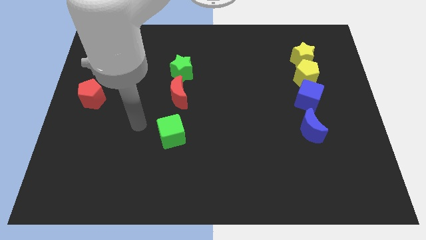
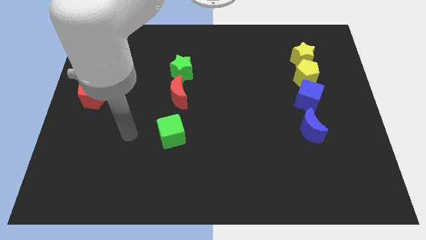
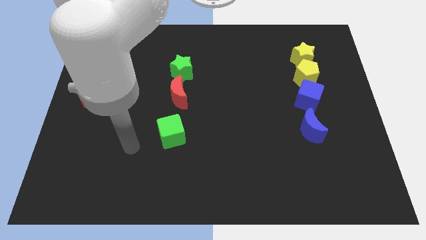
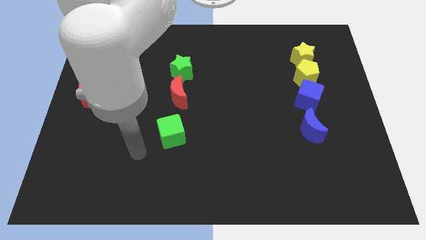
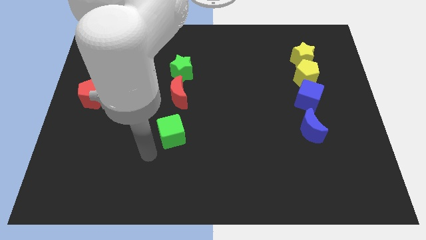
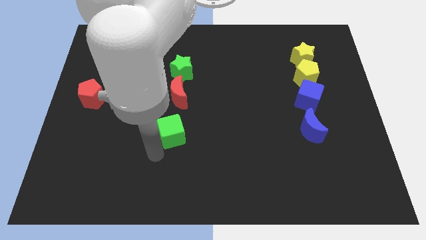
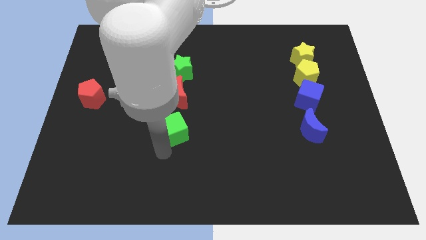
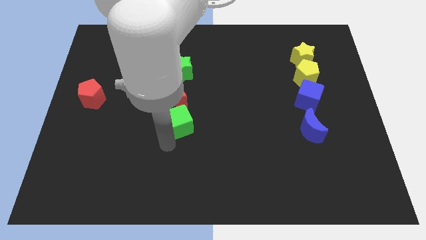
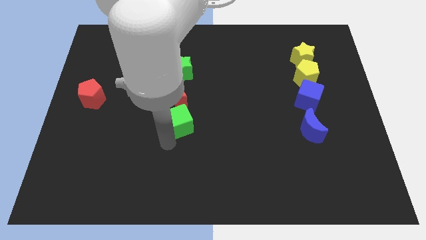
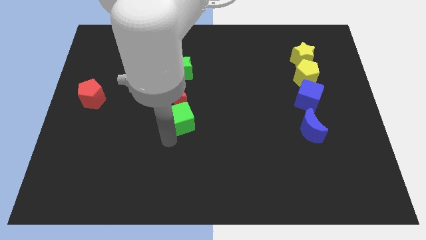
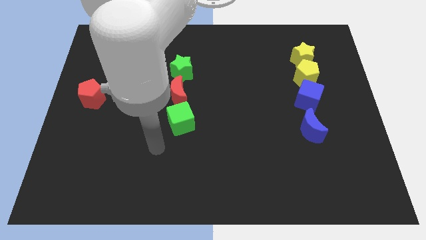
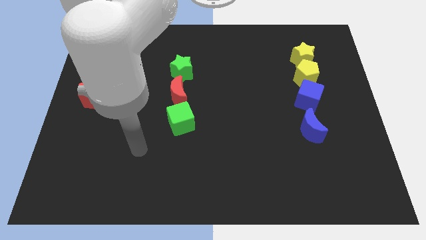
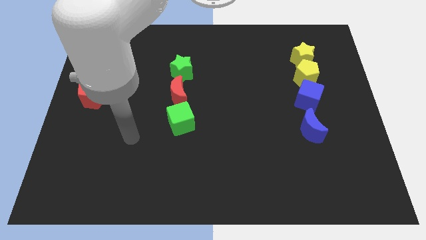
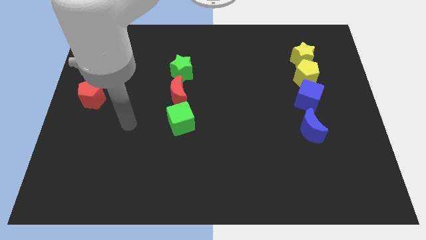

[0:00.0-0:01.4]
place the green cube below the red moon

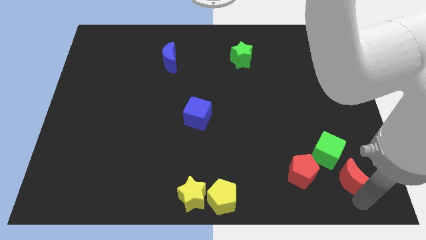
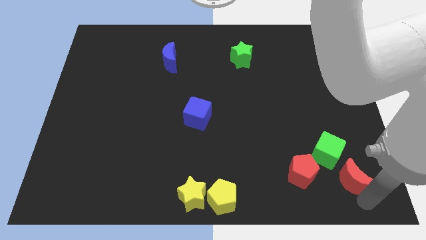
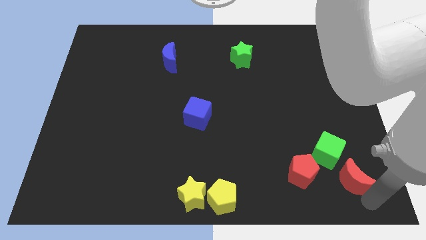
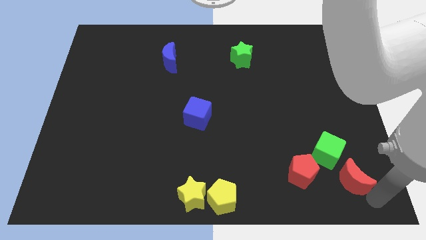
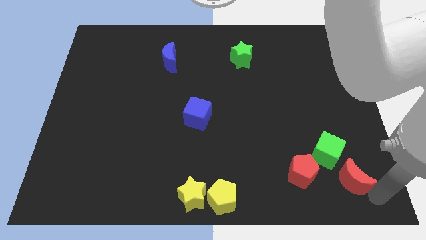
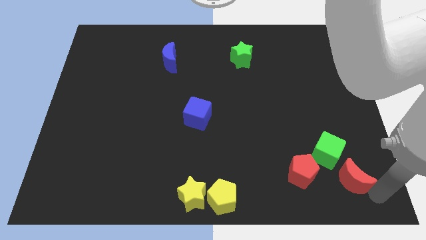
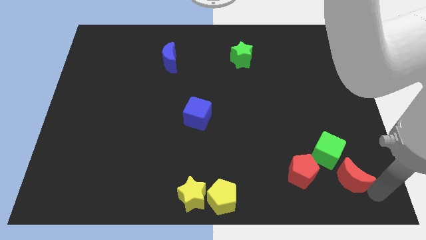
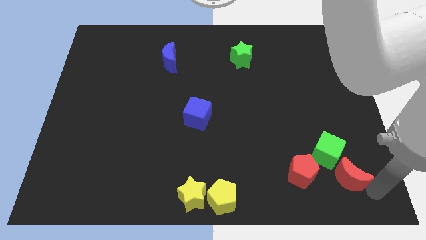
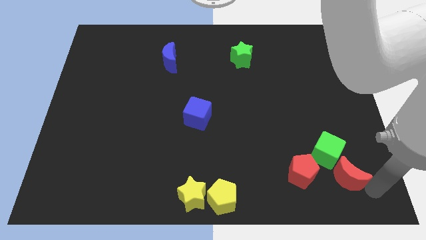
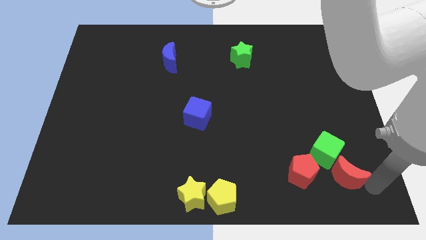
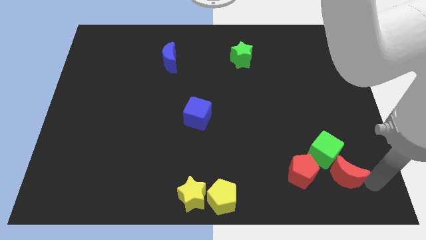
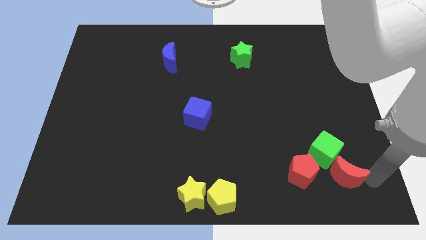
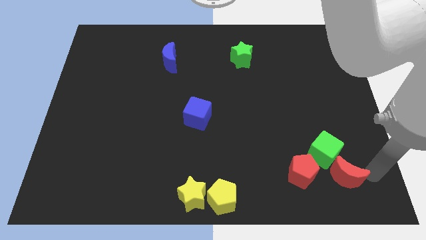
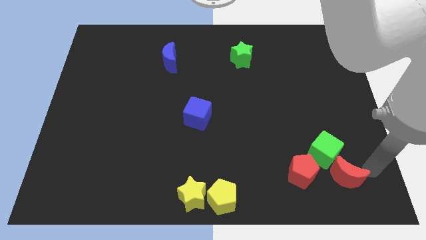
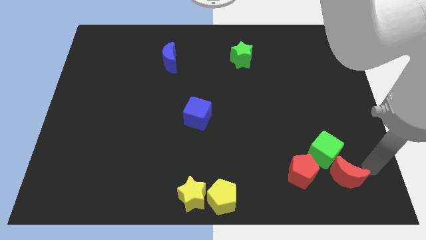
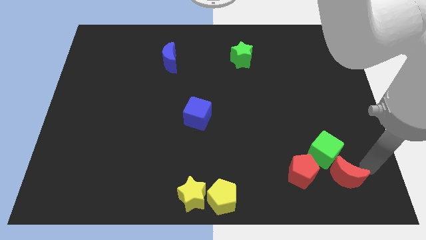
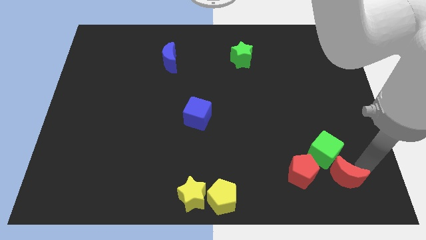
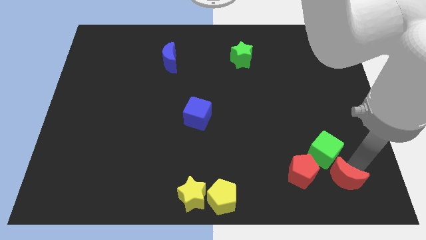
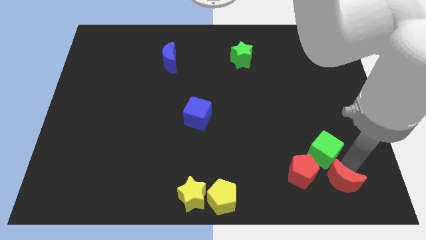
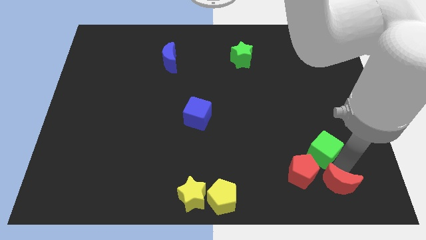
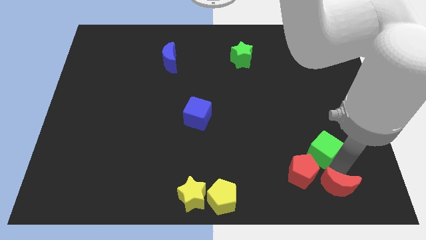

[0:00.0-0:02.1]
move the red crescent into the green cube

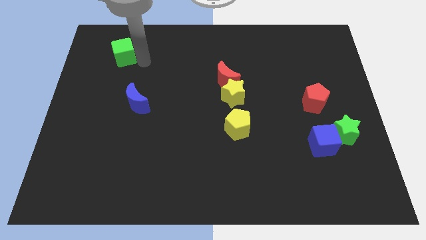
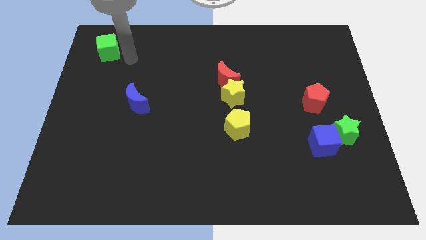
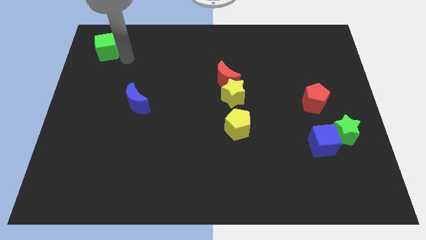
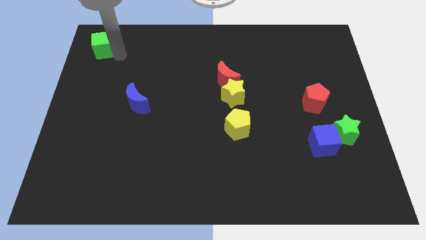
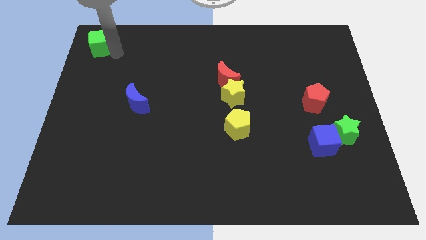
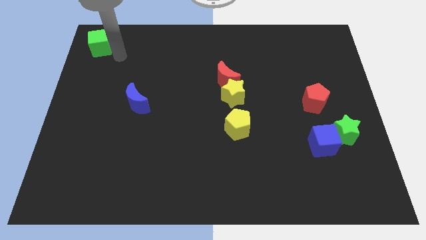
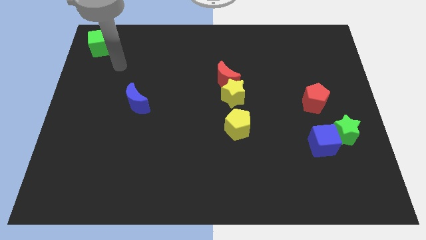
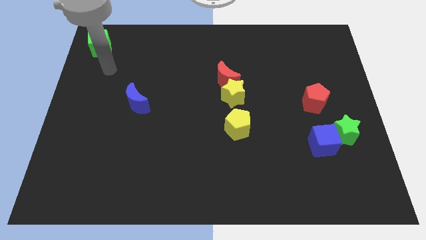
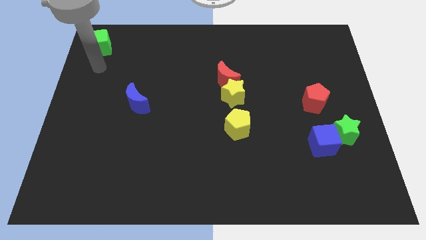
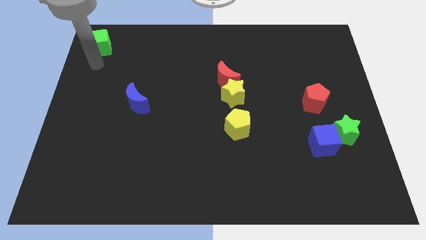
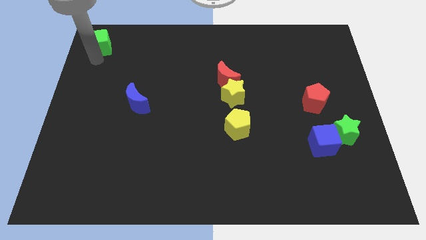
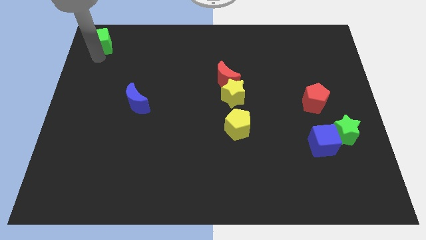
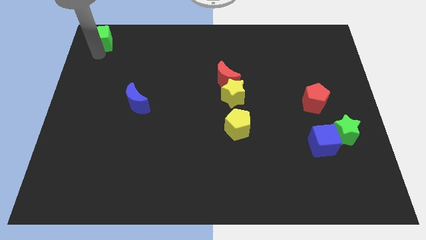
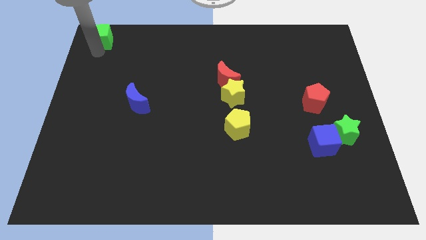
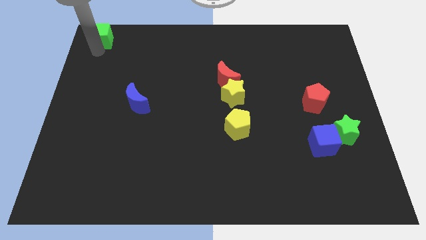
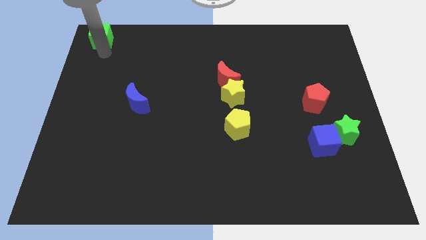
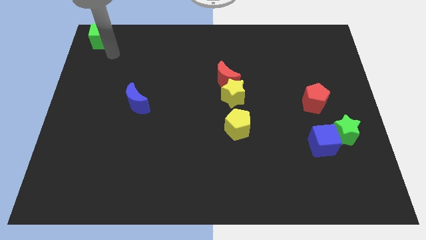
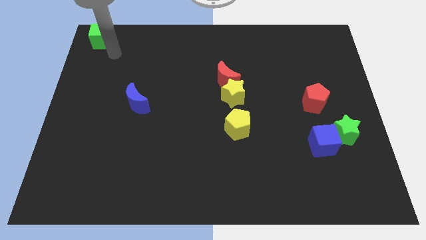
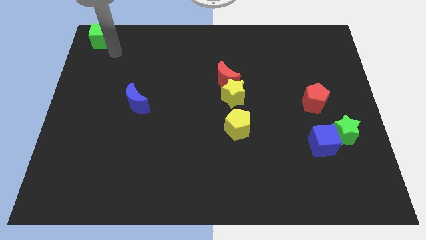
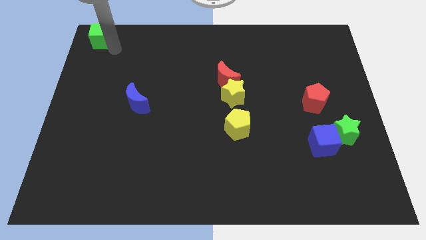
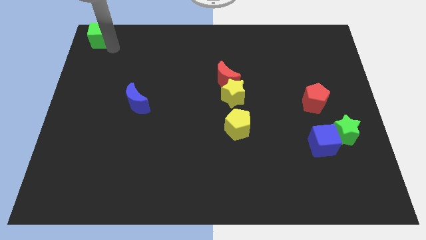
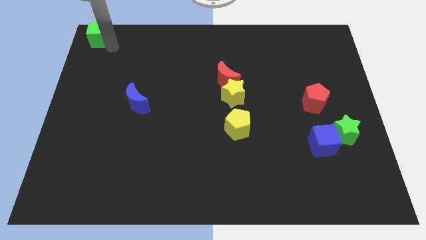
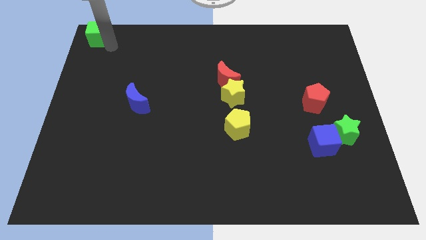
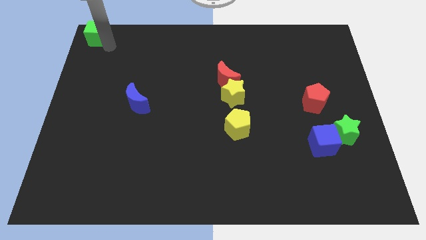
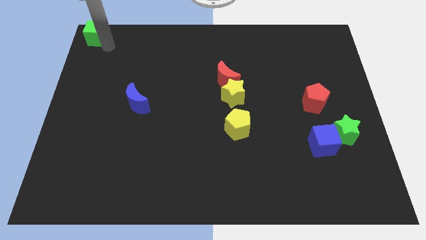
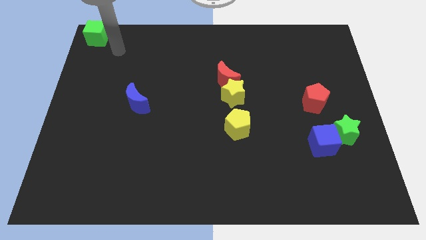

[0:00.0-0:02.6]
place the green cube at top left side of the board

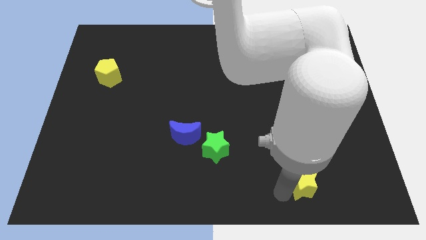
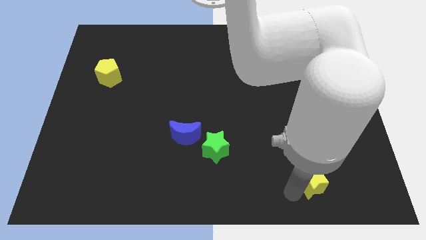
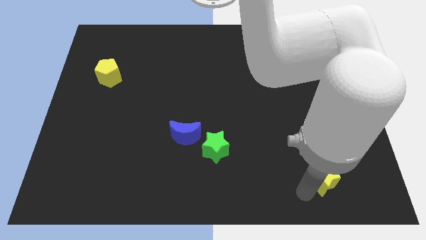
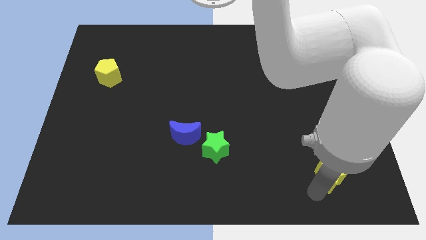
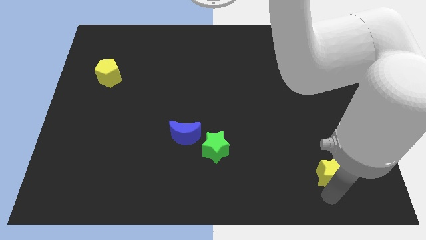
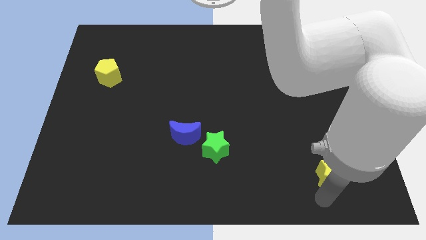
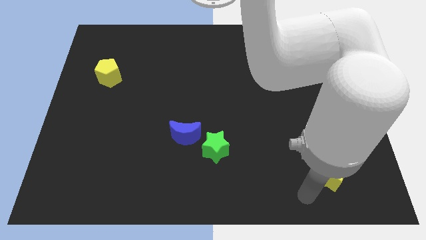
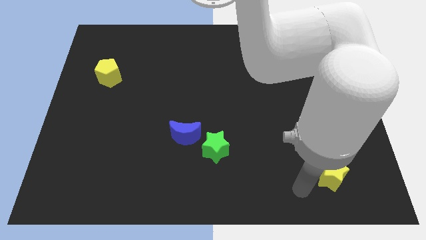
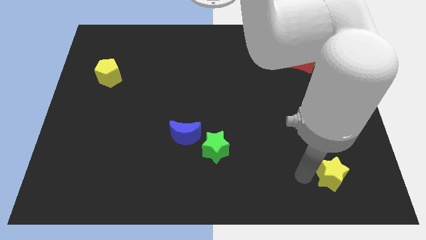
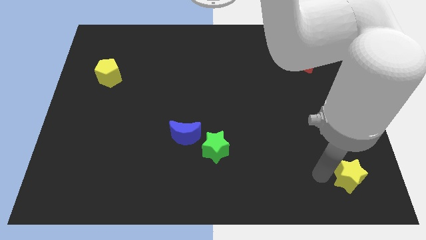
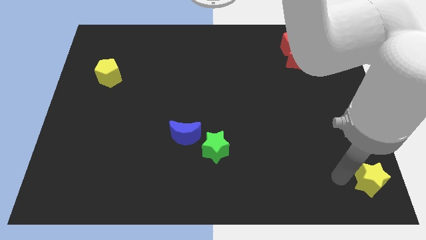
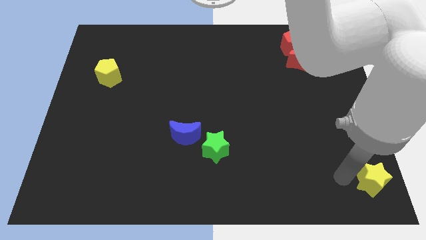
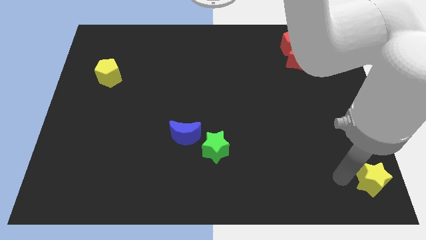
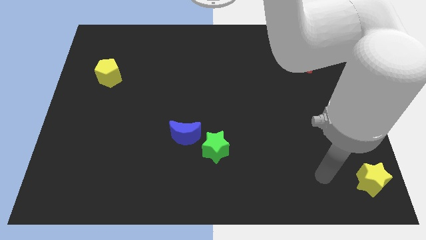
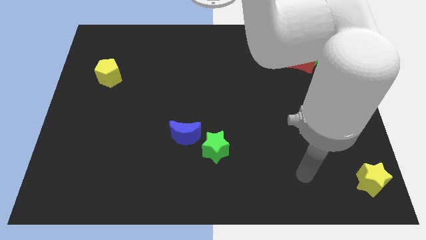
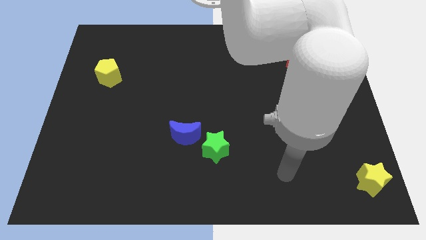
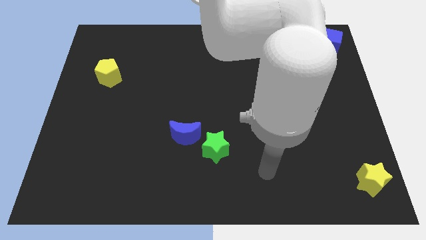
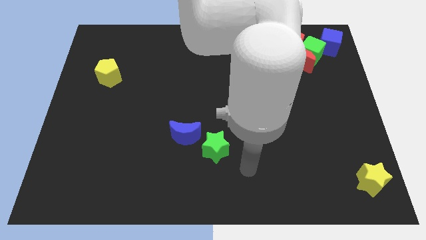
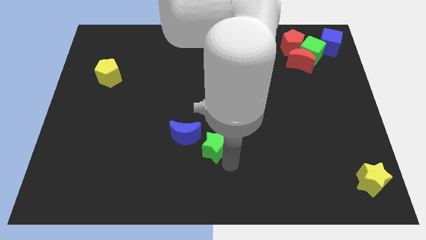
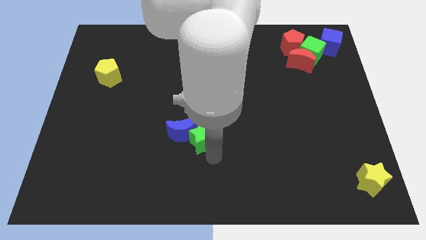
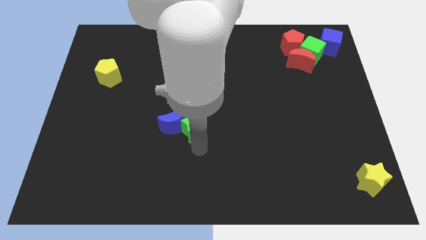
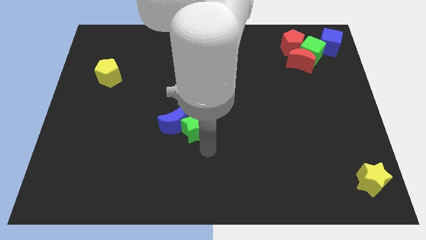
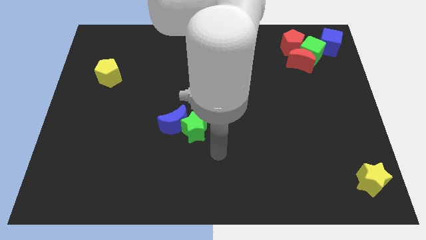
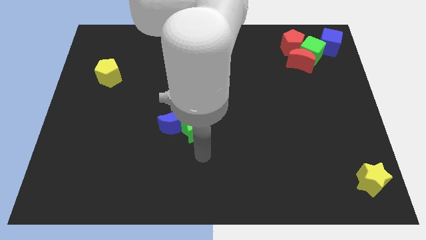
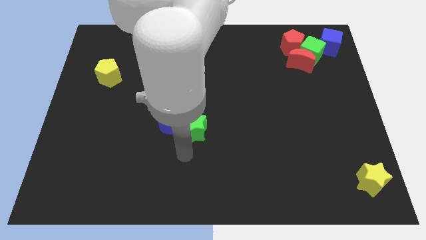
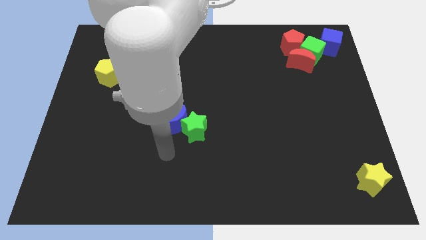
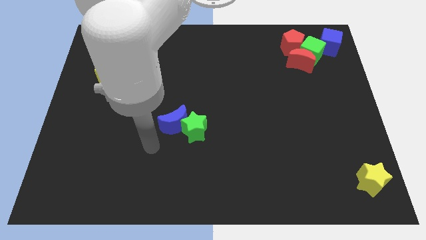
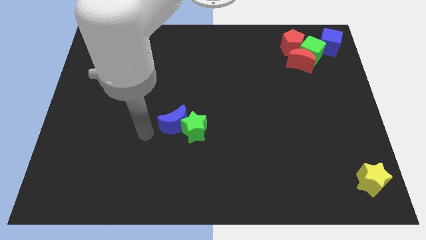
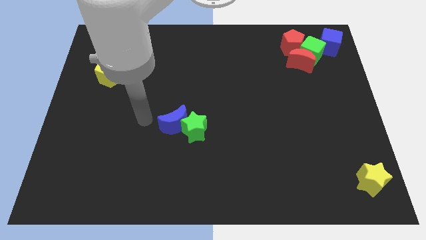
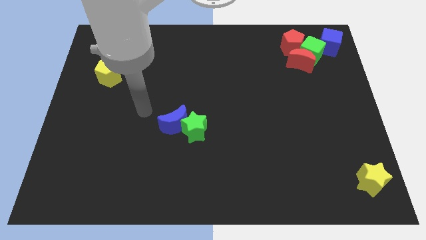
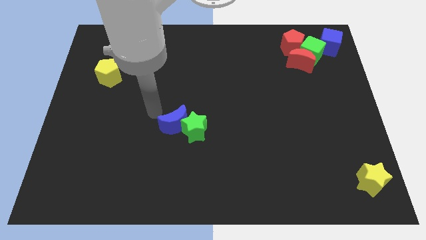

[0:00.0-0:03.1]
move the yellow star to the bottom right of the board
